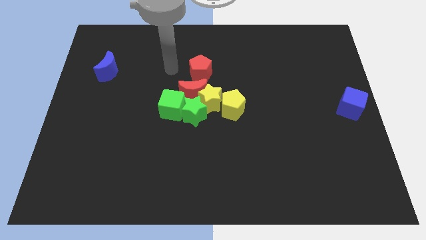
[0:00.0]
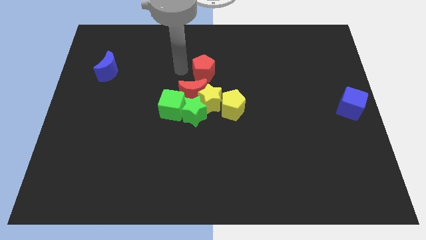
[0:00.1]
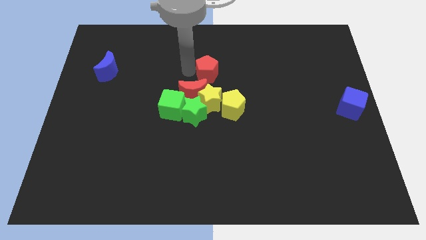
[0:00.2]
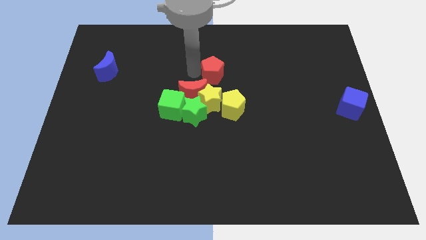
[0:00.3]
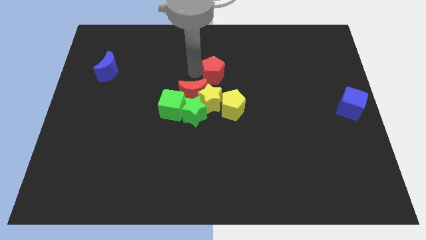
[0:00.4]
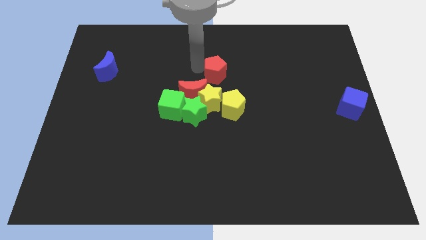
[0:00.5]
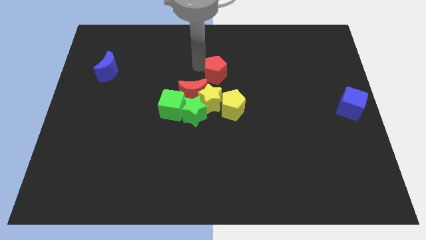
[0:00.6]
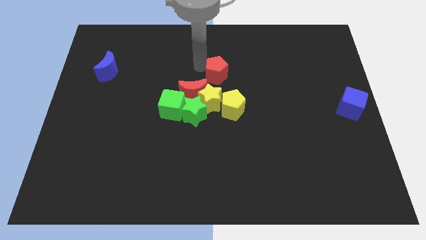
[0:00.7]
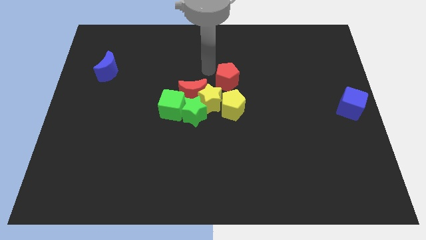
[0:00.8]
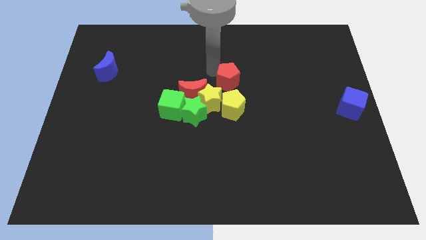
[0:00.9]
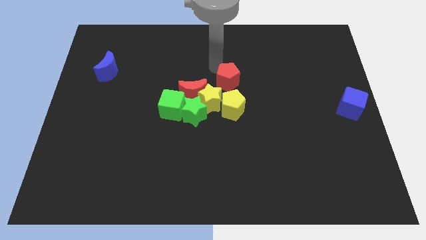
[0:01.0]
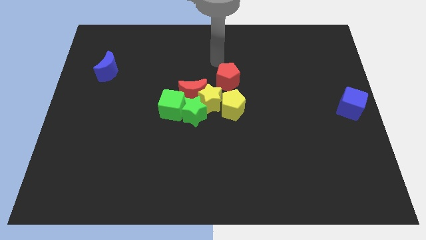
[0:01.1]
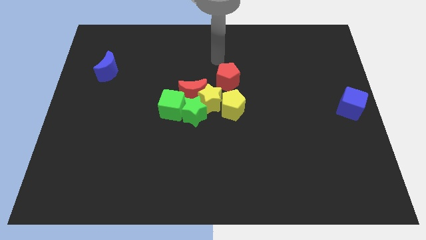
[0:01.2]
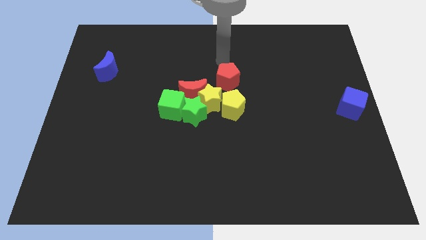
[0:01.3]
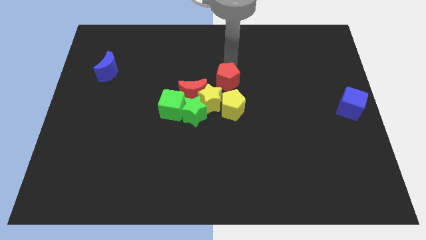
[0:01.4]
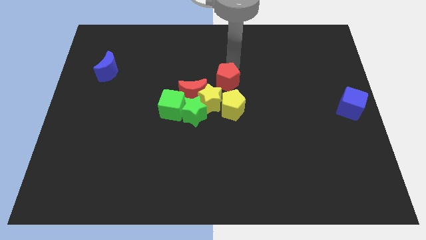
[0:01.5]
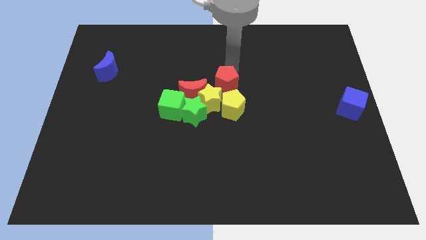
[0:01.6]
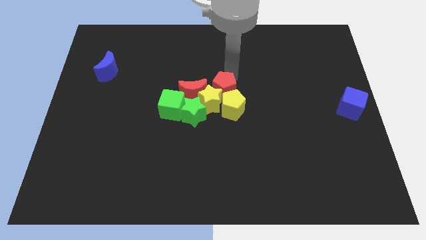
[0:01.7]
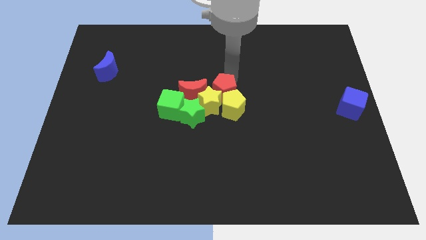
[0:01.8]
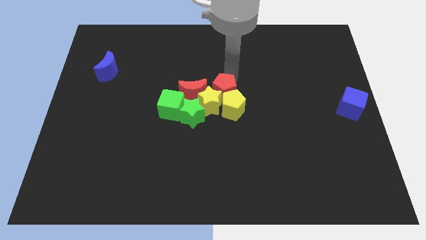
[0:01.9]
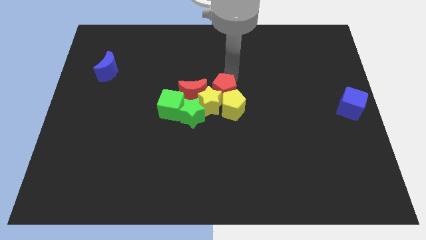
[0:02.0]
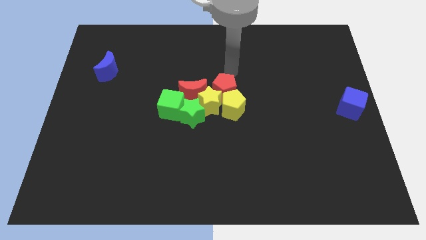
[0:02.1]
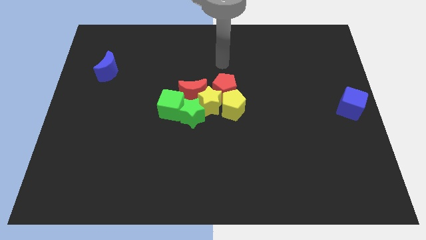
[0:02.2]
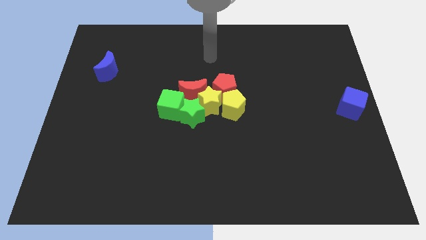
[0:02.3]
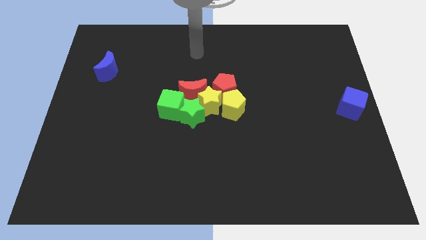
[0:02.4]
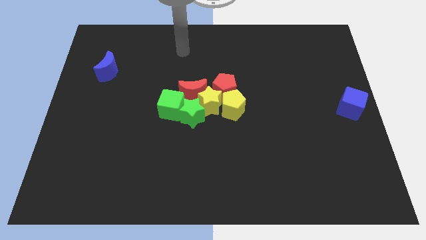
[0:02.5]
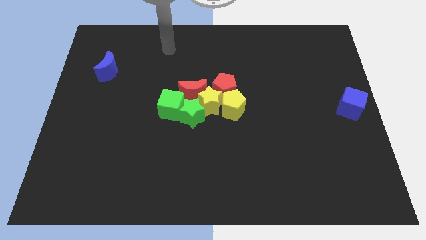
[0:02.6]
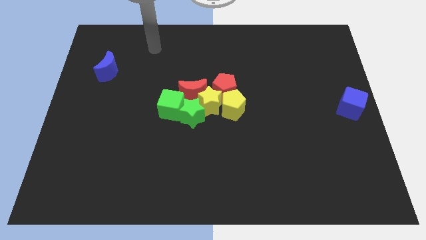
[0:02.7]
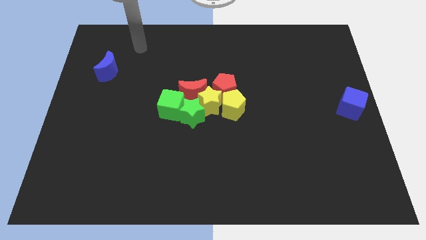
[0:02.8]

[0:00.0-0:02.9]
move red pentagon into group of blocks

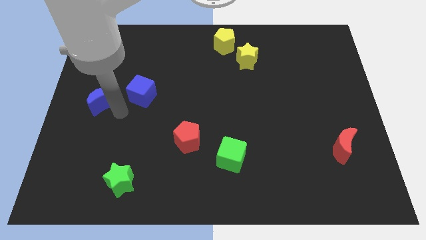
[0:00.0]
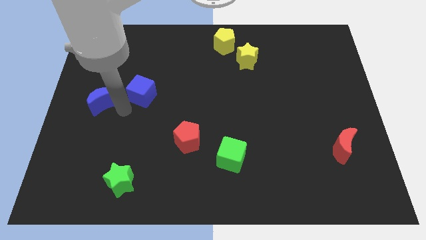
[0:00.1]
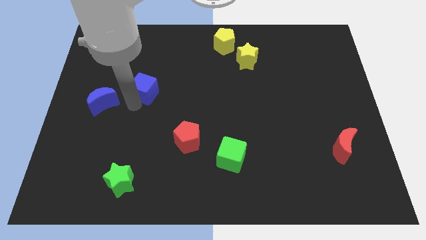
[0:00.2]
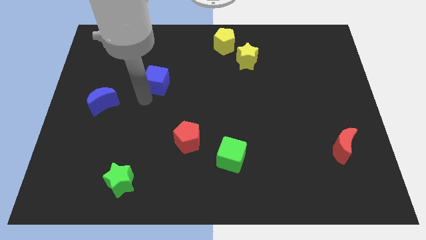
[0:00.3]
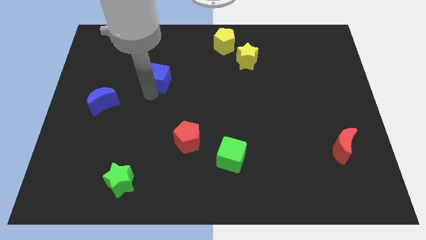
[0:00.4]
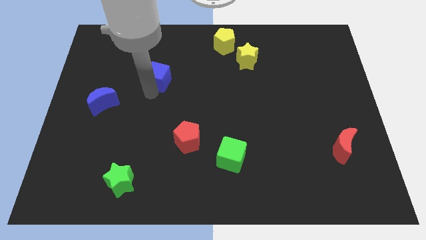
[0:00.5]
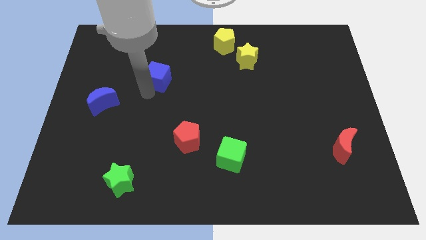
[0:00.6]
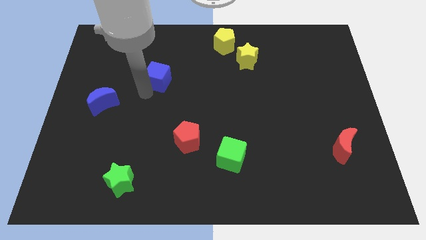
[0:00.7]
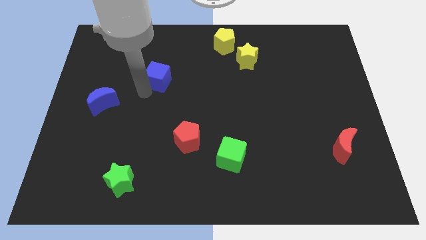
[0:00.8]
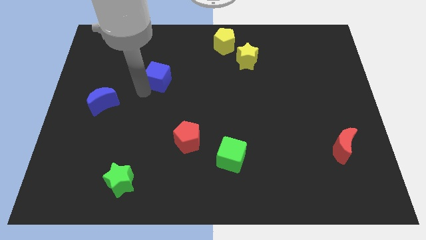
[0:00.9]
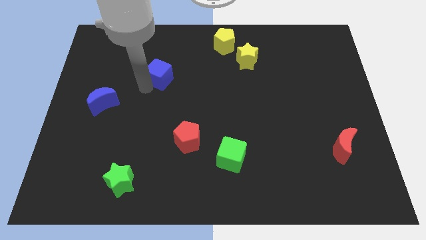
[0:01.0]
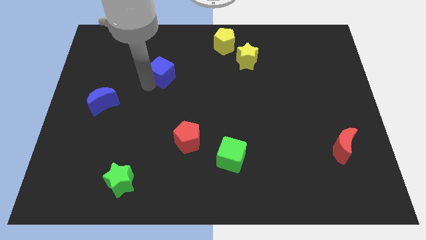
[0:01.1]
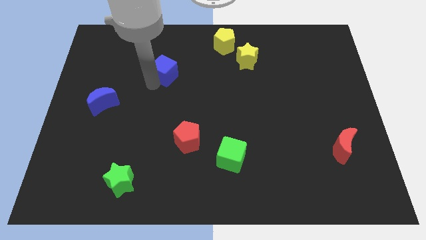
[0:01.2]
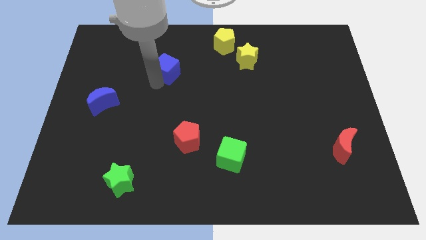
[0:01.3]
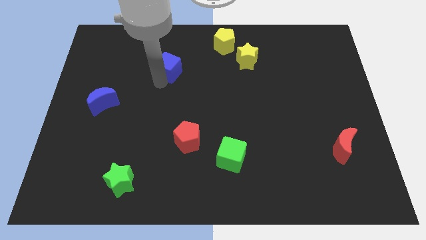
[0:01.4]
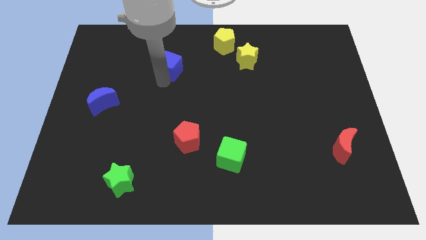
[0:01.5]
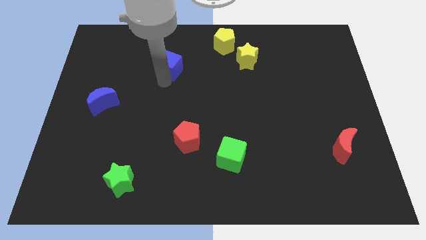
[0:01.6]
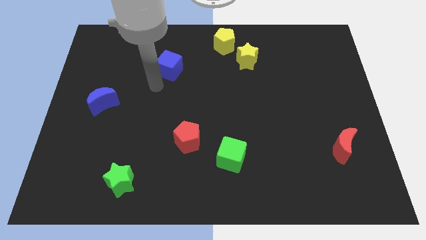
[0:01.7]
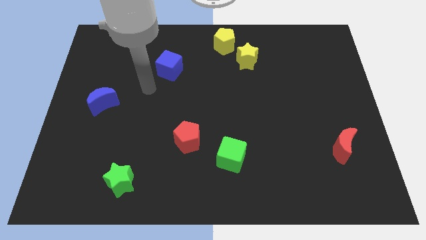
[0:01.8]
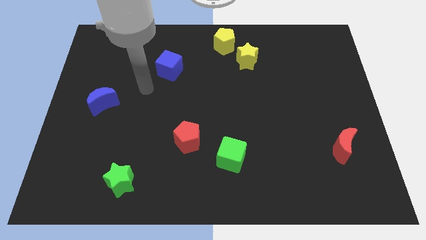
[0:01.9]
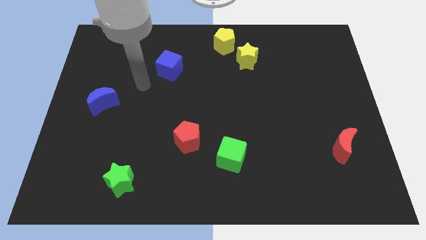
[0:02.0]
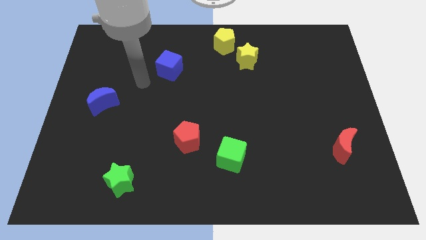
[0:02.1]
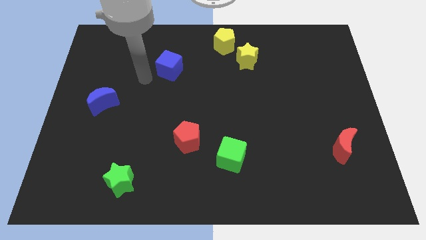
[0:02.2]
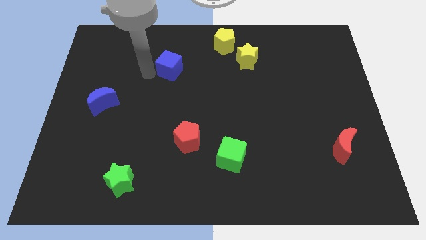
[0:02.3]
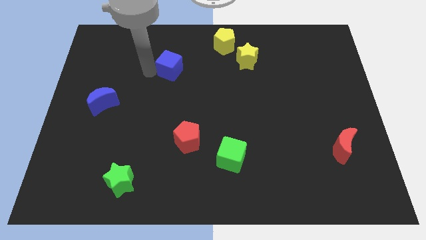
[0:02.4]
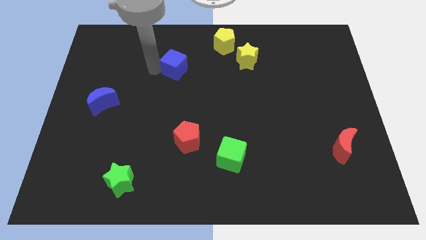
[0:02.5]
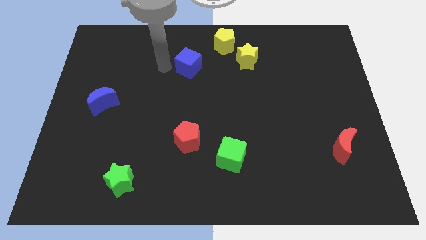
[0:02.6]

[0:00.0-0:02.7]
push blue cube vertically above red pentagon

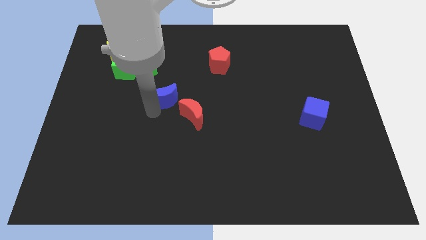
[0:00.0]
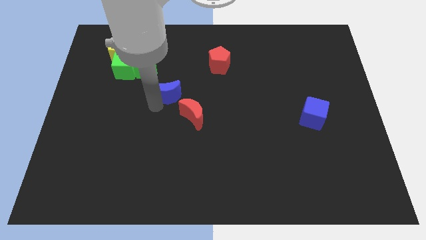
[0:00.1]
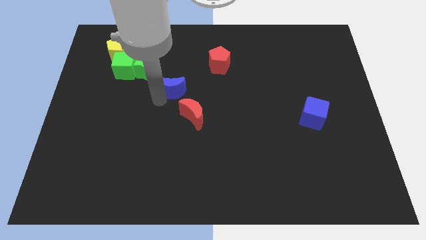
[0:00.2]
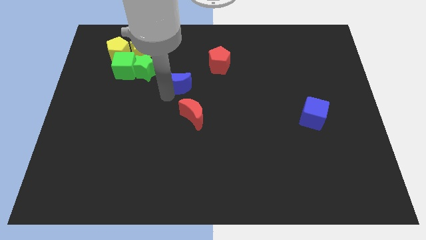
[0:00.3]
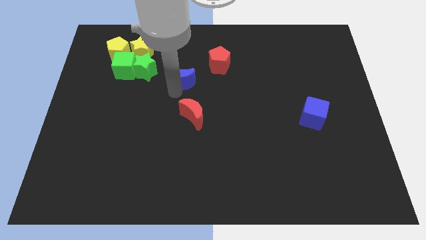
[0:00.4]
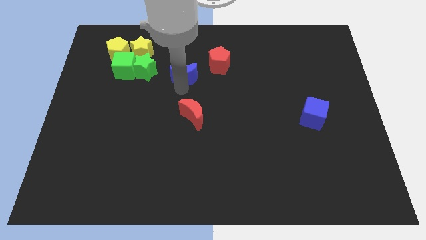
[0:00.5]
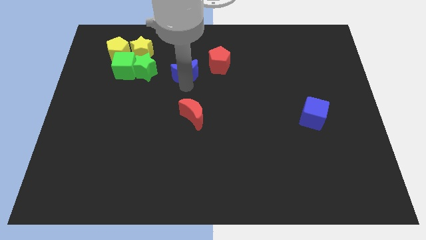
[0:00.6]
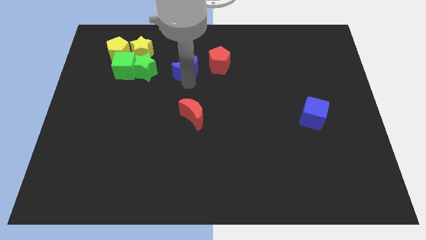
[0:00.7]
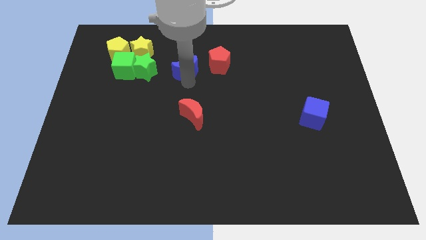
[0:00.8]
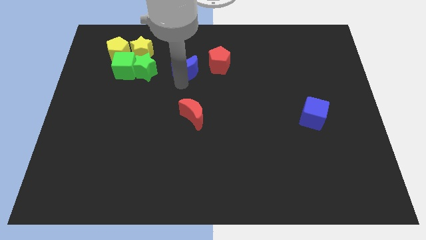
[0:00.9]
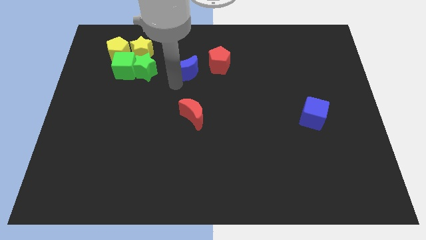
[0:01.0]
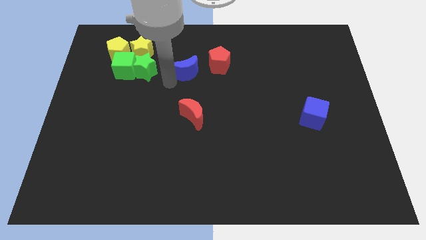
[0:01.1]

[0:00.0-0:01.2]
drag the blue moon slightly upwards

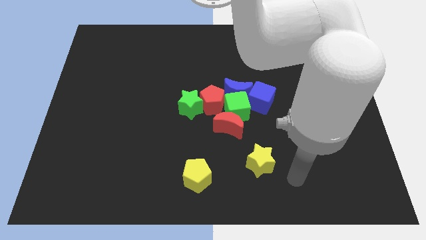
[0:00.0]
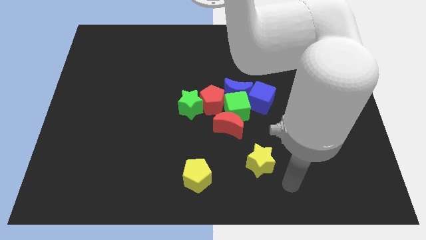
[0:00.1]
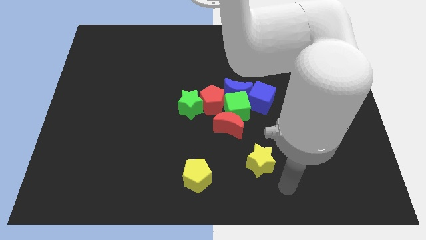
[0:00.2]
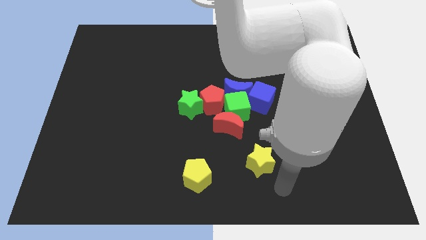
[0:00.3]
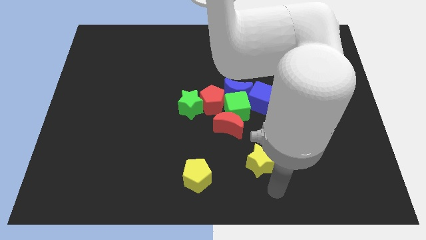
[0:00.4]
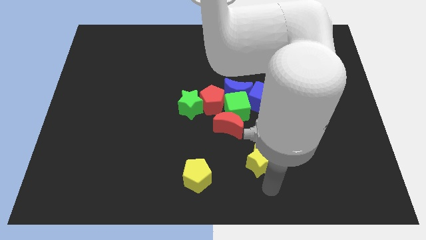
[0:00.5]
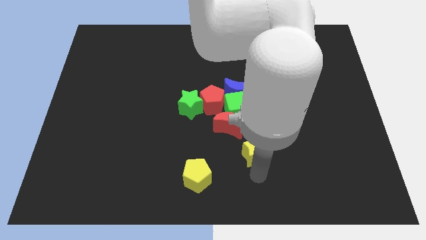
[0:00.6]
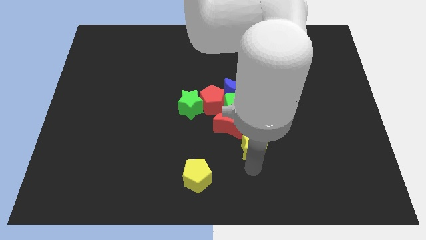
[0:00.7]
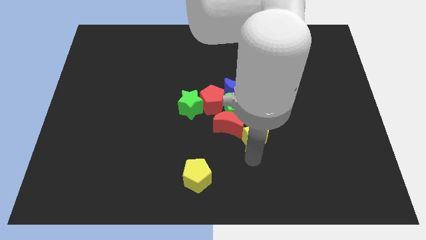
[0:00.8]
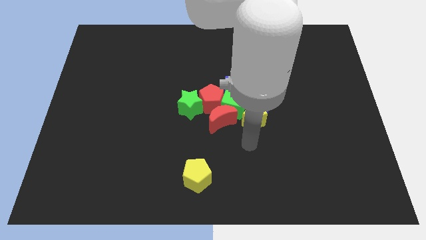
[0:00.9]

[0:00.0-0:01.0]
push the yellow star towards the group of blocks

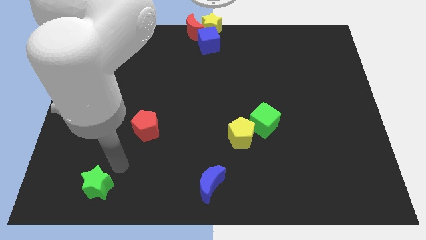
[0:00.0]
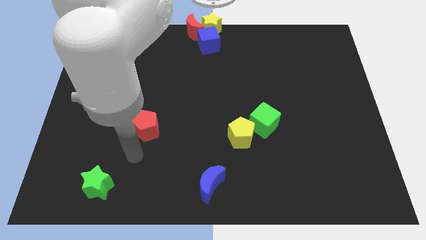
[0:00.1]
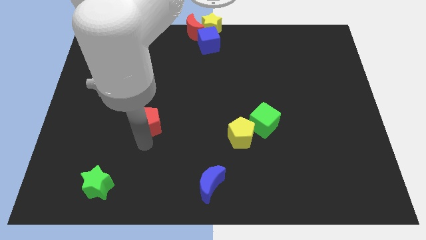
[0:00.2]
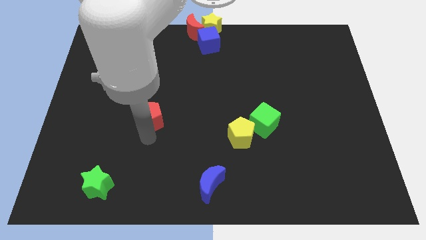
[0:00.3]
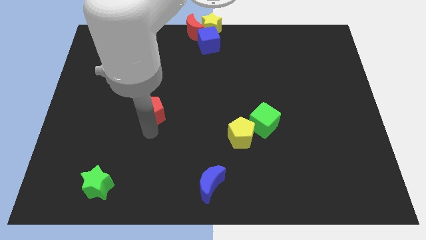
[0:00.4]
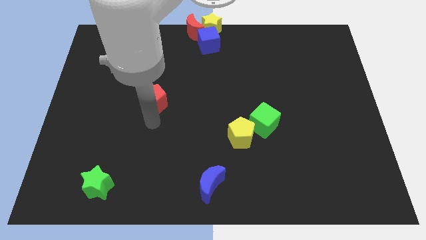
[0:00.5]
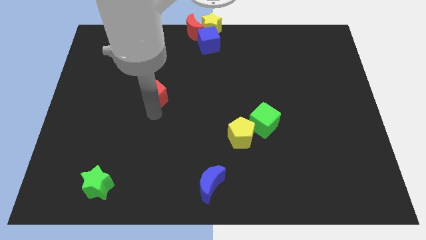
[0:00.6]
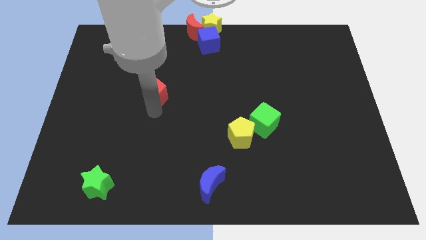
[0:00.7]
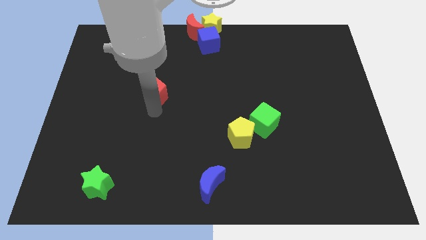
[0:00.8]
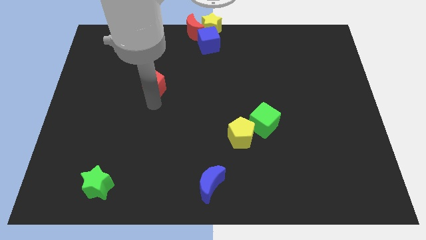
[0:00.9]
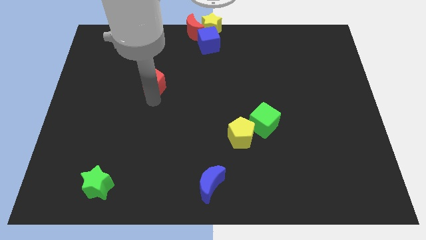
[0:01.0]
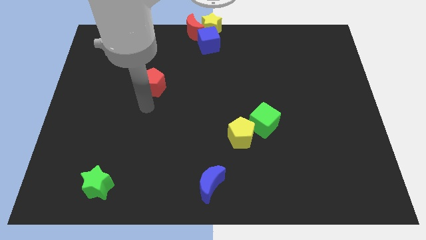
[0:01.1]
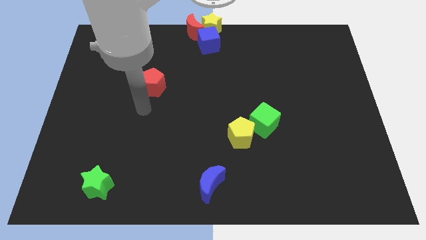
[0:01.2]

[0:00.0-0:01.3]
slide the red pentagon towards up
